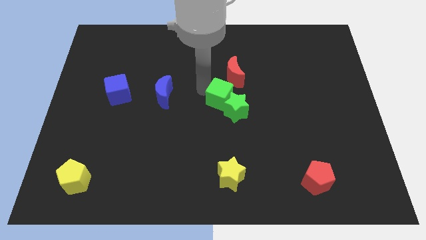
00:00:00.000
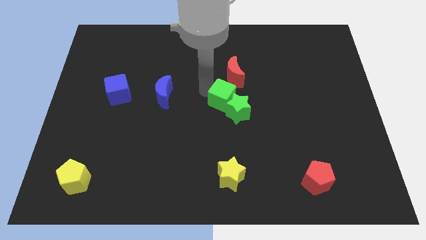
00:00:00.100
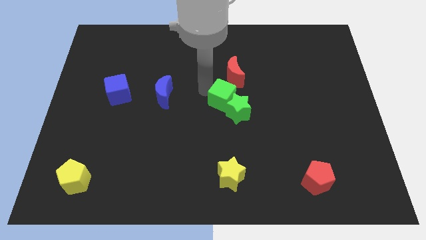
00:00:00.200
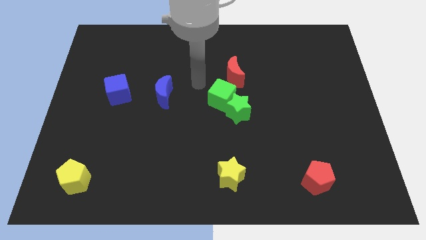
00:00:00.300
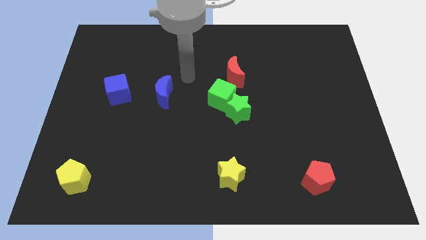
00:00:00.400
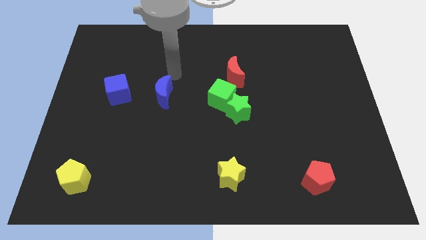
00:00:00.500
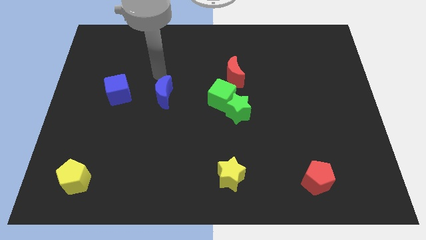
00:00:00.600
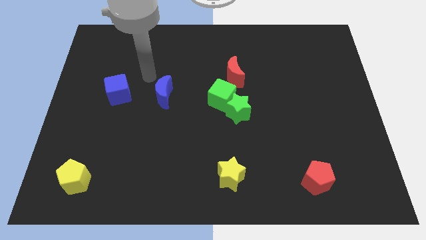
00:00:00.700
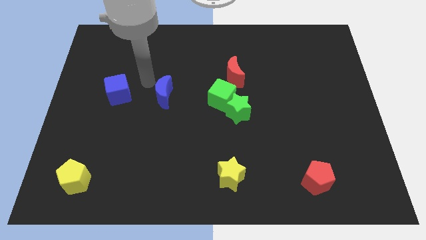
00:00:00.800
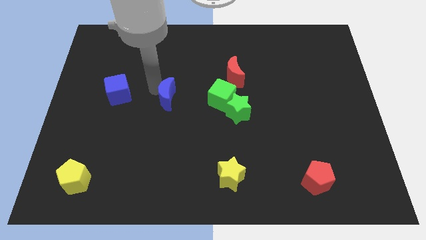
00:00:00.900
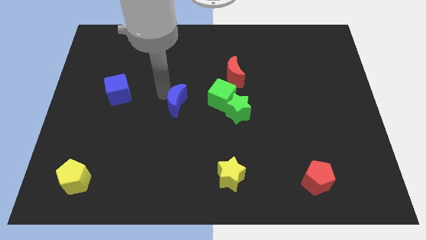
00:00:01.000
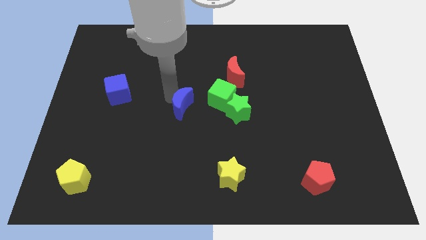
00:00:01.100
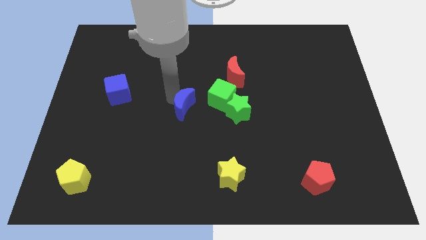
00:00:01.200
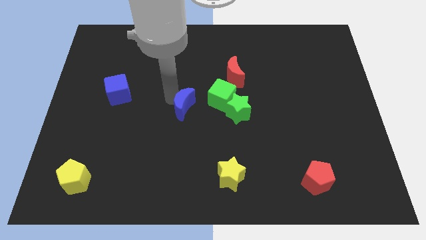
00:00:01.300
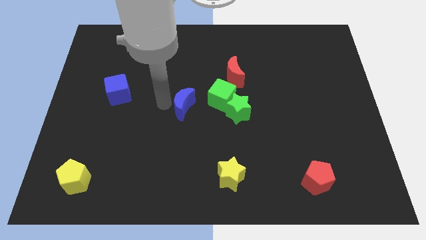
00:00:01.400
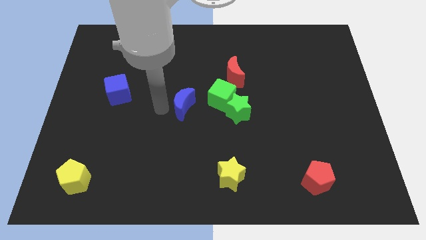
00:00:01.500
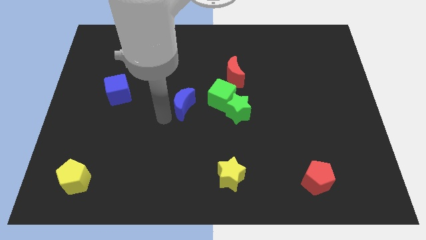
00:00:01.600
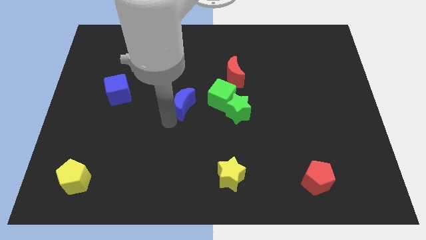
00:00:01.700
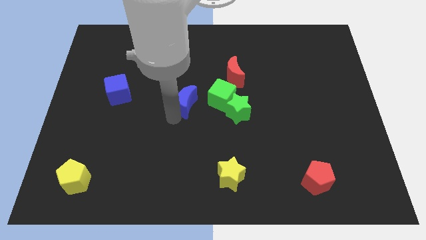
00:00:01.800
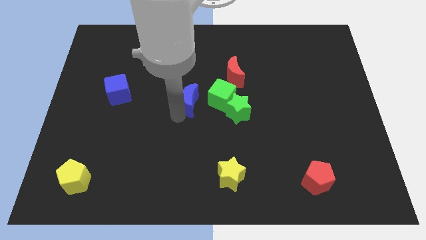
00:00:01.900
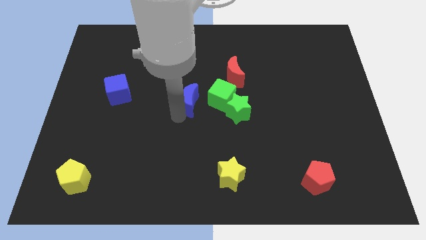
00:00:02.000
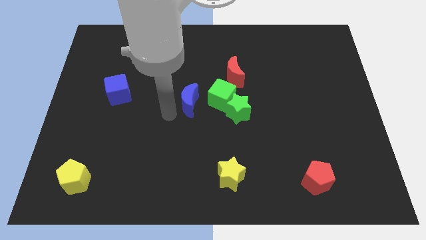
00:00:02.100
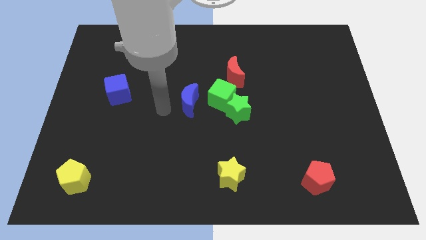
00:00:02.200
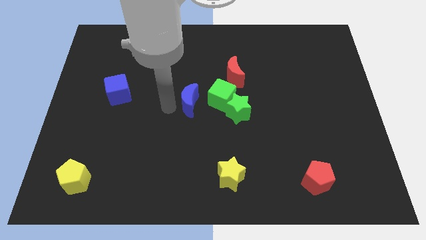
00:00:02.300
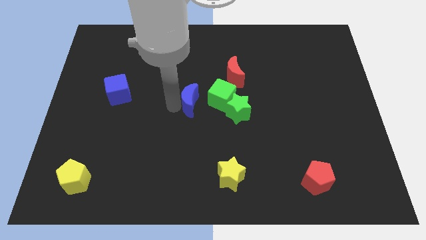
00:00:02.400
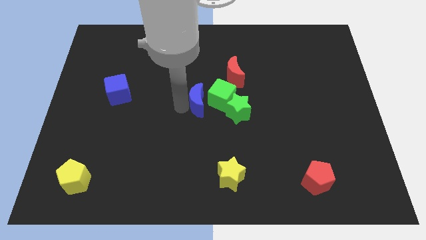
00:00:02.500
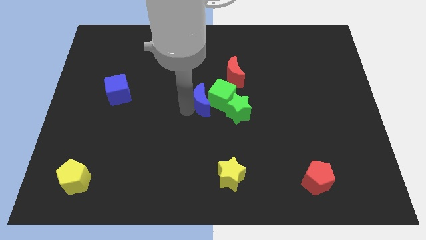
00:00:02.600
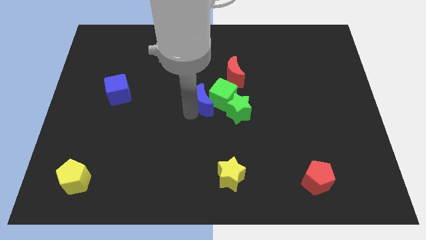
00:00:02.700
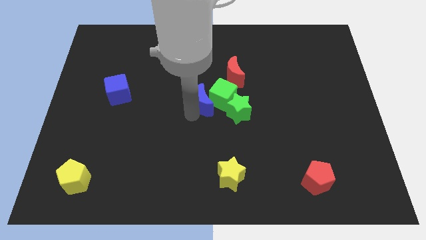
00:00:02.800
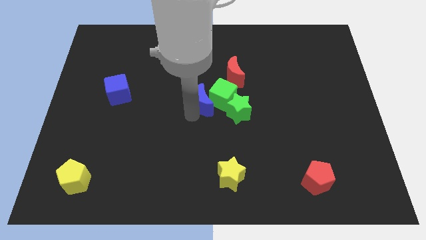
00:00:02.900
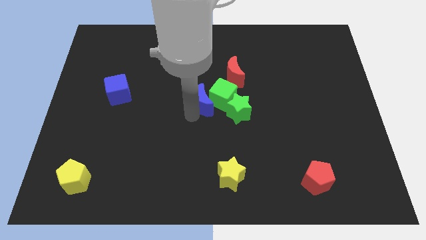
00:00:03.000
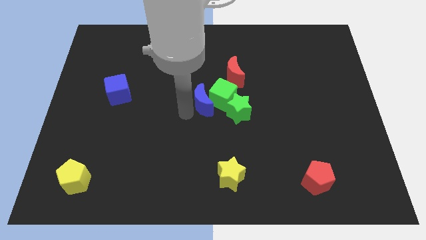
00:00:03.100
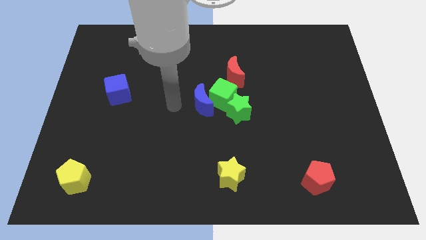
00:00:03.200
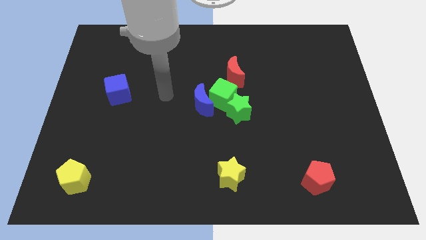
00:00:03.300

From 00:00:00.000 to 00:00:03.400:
push the blue moon to the bottom left of the green cube

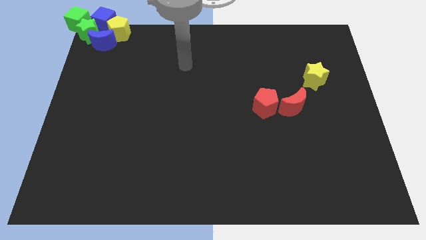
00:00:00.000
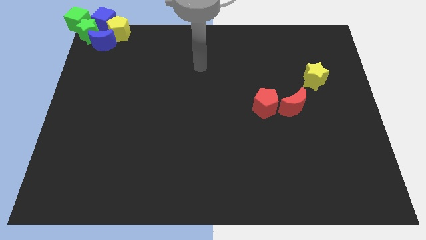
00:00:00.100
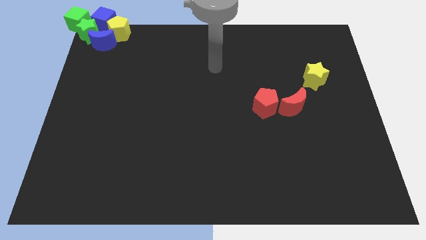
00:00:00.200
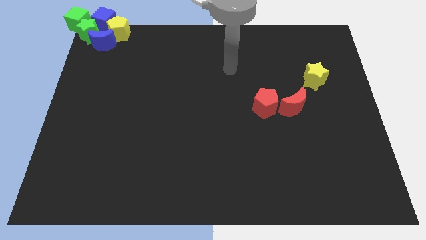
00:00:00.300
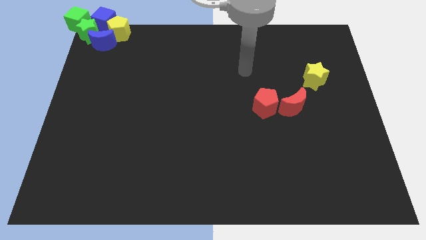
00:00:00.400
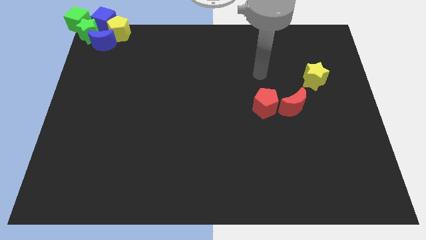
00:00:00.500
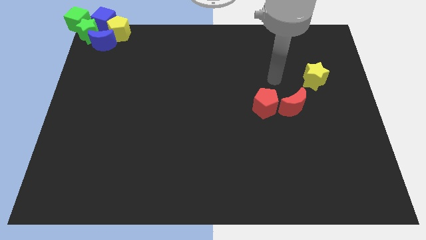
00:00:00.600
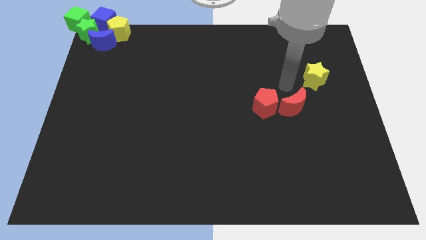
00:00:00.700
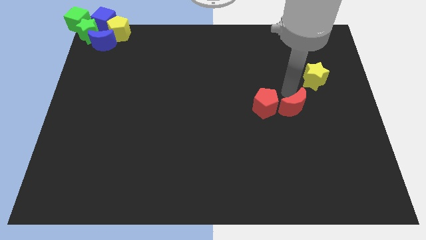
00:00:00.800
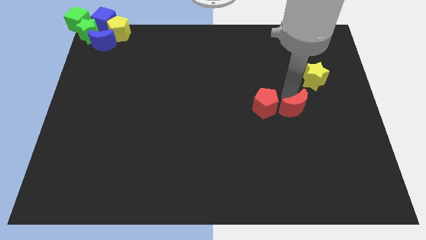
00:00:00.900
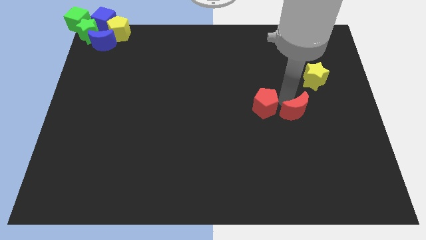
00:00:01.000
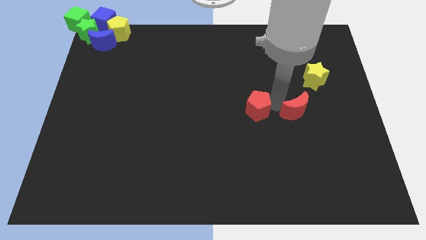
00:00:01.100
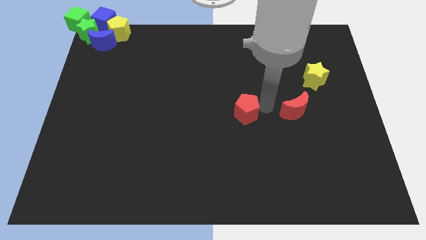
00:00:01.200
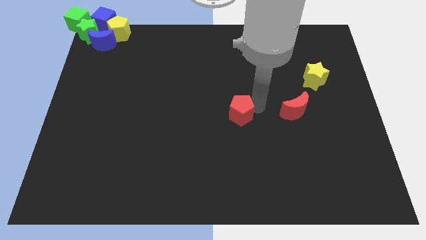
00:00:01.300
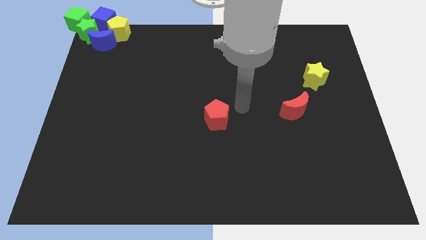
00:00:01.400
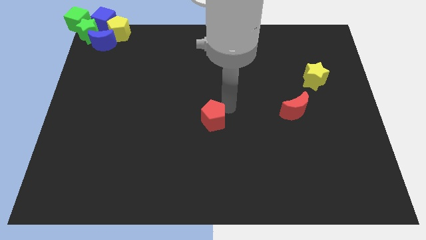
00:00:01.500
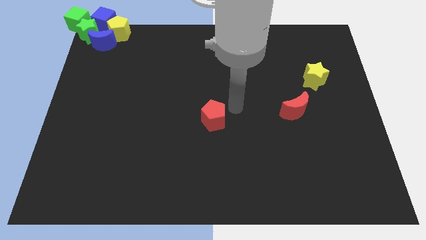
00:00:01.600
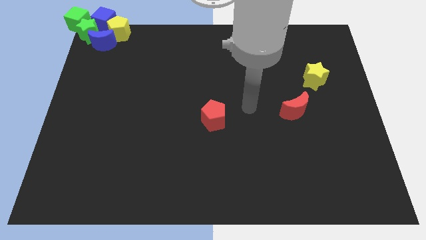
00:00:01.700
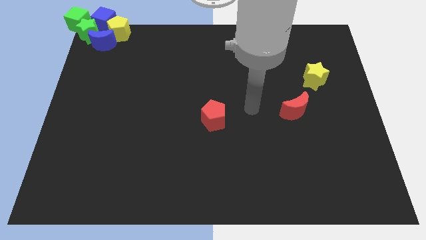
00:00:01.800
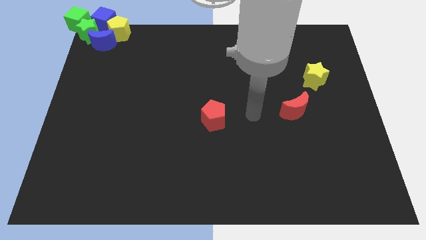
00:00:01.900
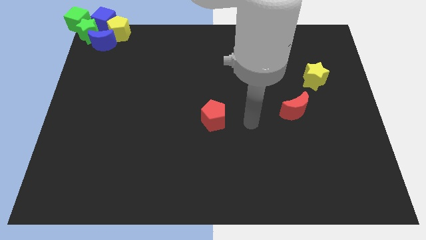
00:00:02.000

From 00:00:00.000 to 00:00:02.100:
separate the red pentagon from red crescent

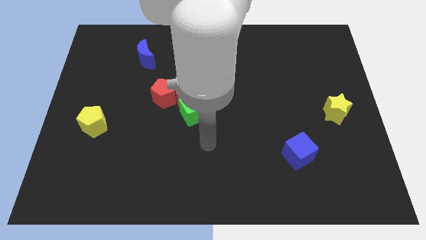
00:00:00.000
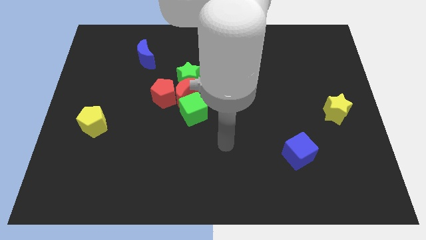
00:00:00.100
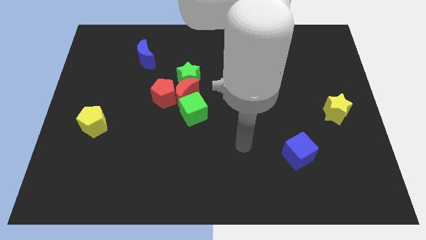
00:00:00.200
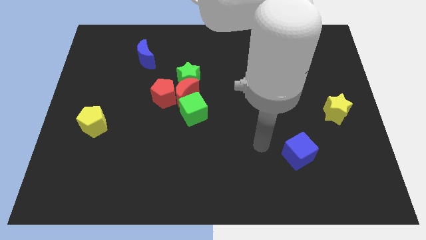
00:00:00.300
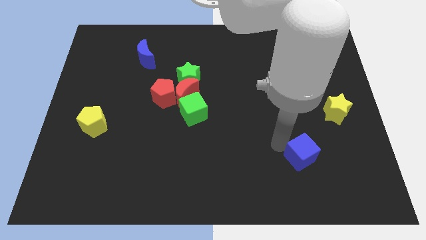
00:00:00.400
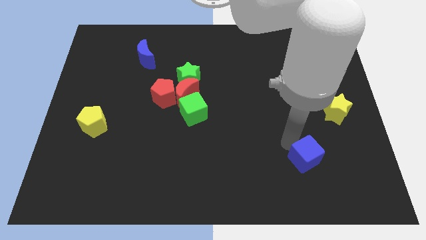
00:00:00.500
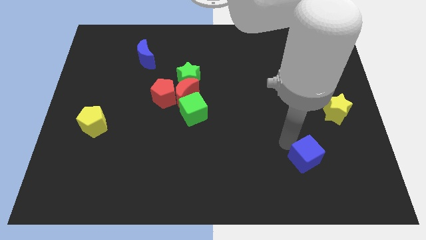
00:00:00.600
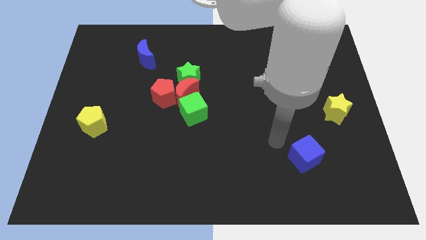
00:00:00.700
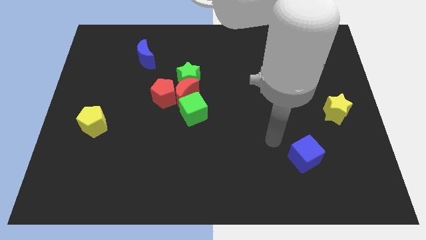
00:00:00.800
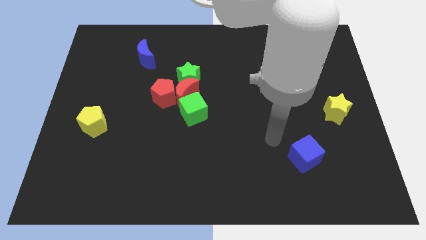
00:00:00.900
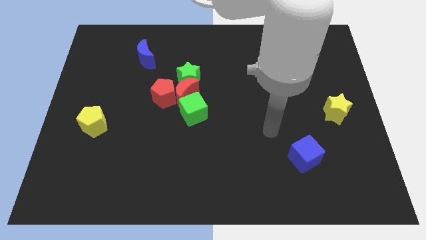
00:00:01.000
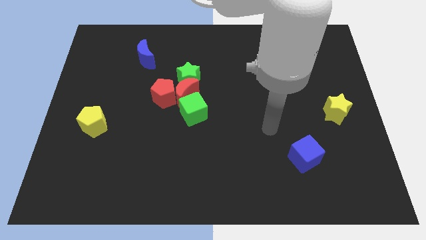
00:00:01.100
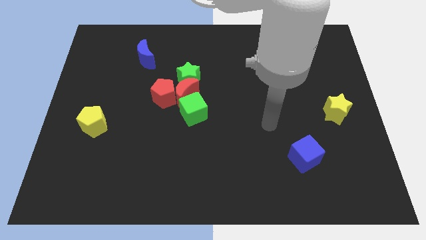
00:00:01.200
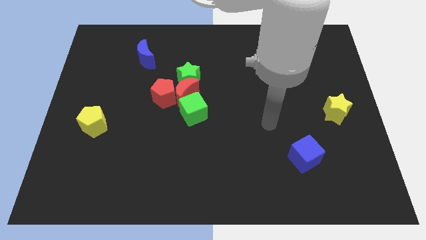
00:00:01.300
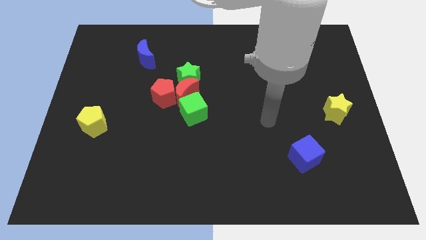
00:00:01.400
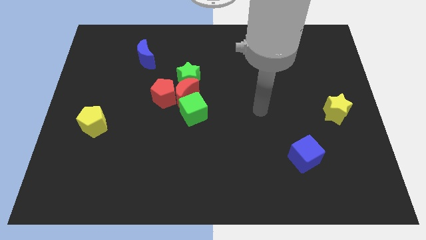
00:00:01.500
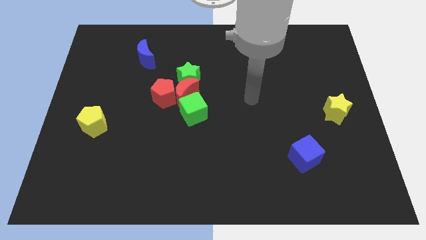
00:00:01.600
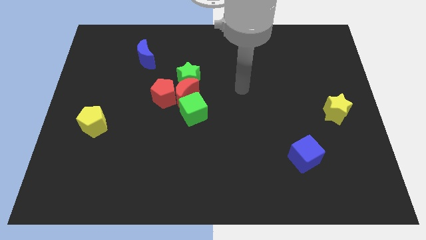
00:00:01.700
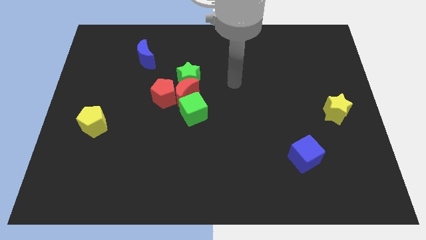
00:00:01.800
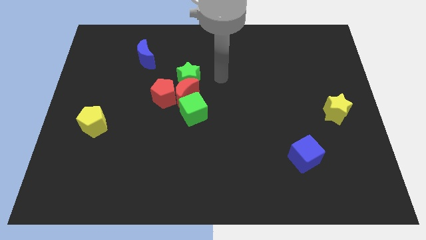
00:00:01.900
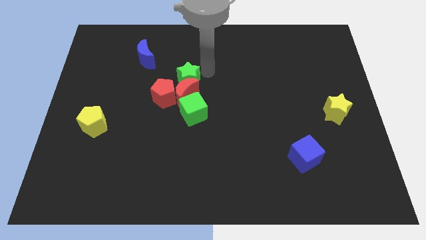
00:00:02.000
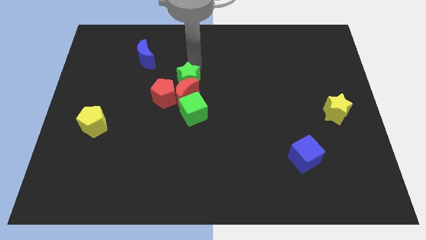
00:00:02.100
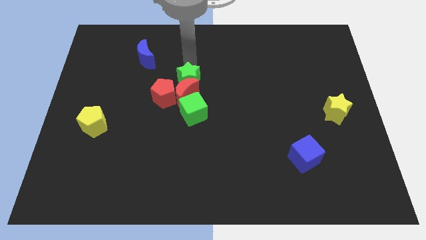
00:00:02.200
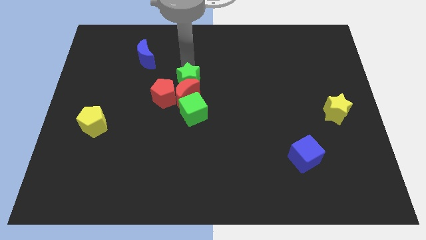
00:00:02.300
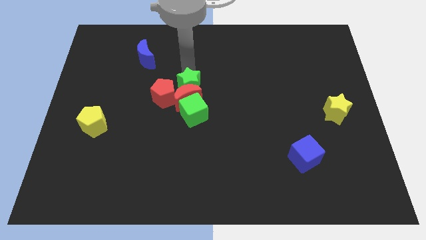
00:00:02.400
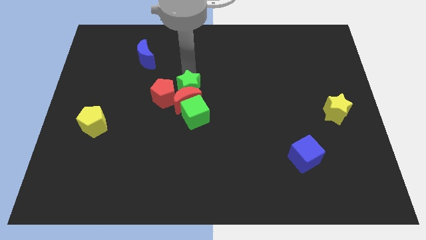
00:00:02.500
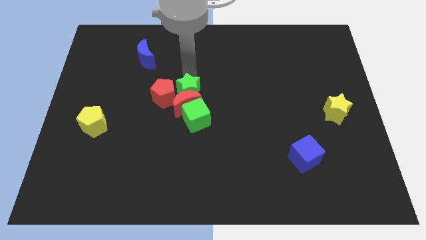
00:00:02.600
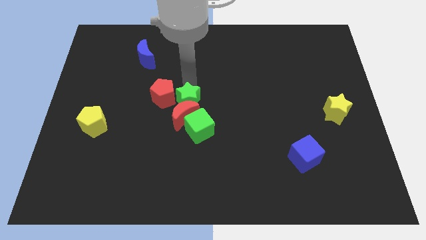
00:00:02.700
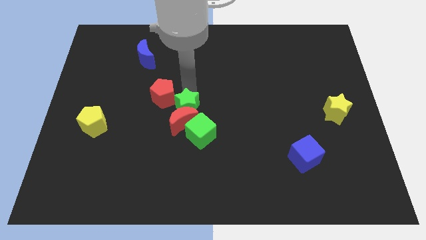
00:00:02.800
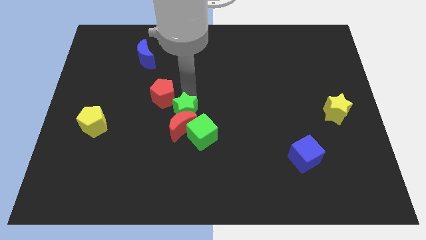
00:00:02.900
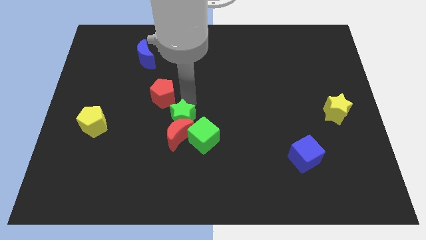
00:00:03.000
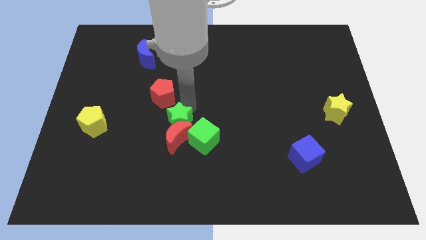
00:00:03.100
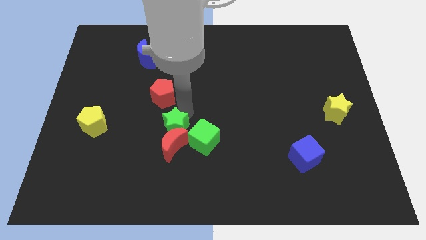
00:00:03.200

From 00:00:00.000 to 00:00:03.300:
push green star in to red moon

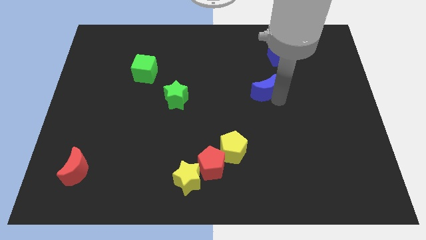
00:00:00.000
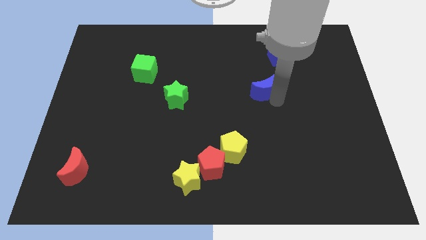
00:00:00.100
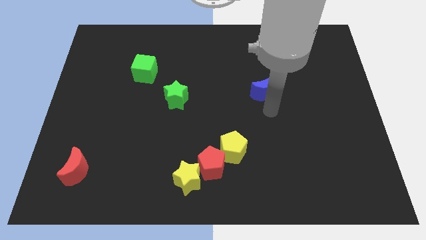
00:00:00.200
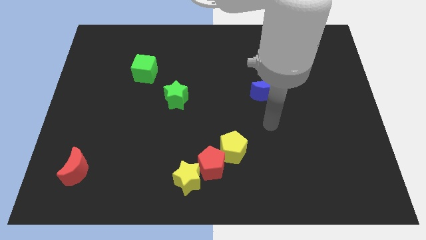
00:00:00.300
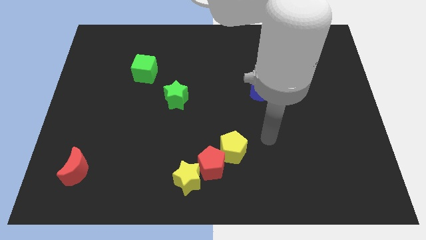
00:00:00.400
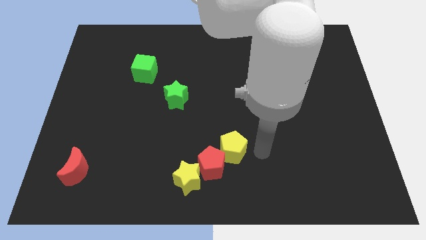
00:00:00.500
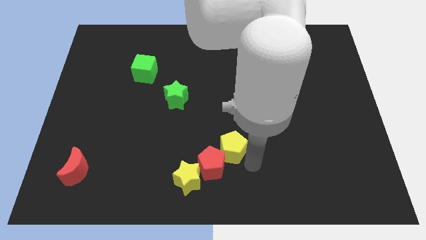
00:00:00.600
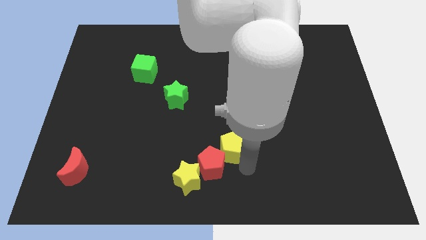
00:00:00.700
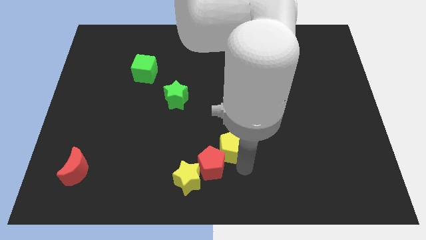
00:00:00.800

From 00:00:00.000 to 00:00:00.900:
move your arm towards the bottom side of the yellow pentagon
